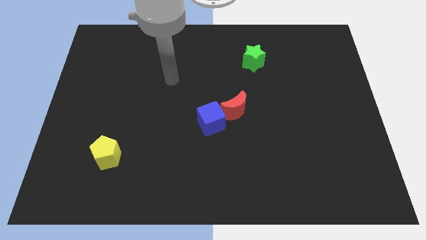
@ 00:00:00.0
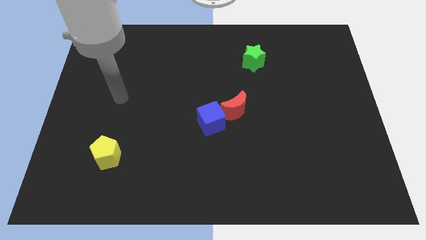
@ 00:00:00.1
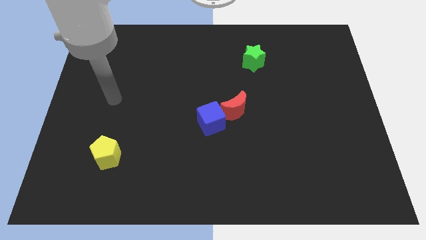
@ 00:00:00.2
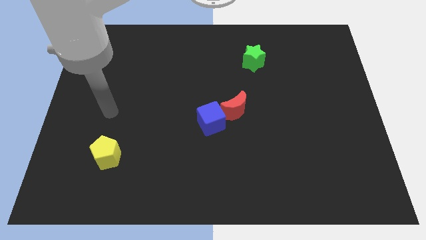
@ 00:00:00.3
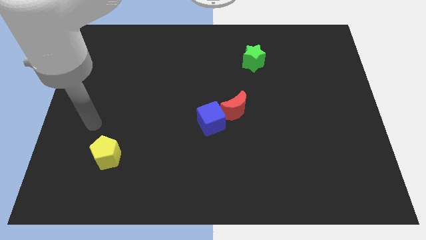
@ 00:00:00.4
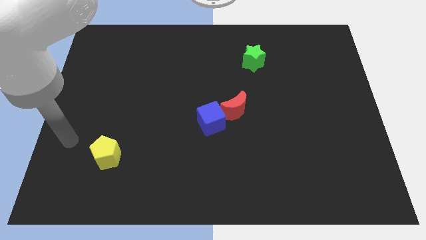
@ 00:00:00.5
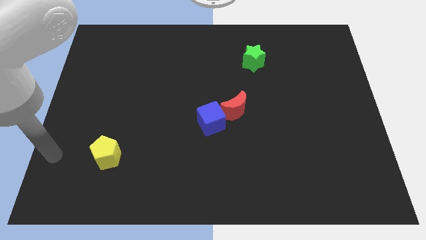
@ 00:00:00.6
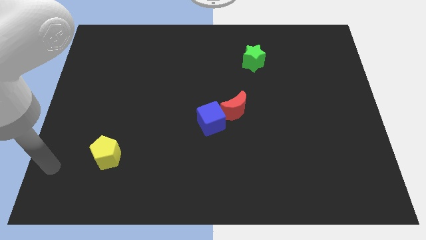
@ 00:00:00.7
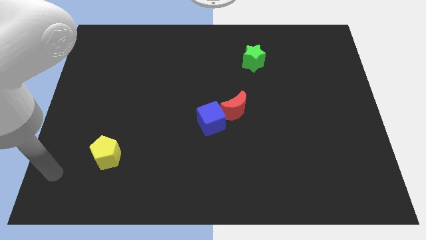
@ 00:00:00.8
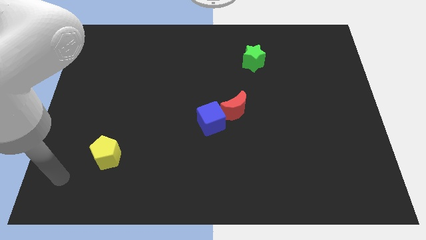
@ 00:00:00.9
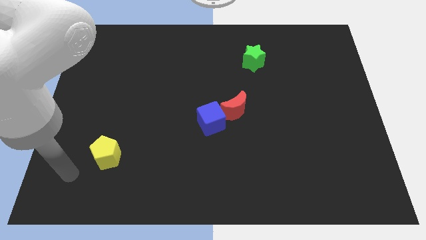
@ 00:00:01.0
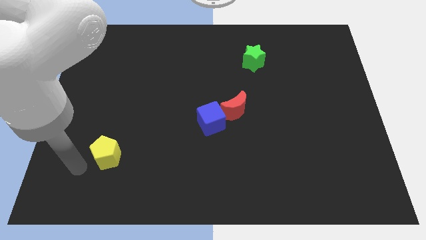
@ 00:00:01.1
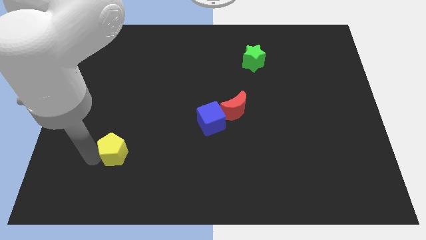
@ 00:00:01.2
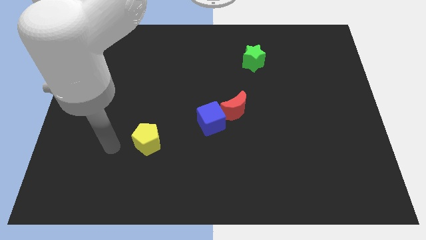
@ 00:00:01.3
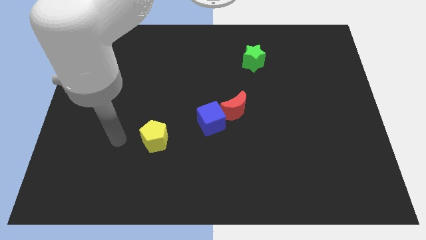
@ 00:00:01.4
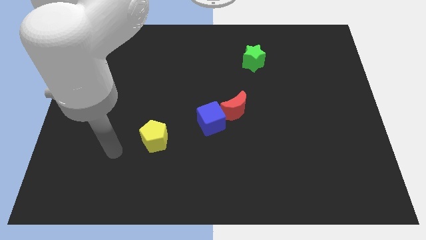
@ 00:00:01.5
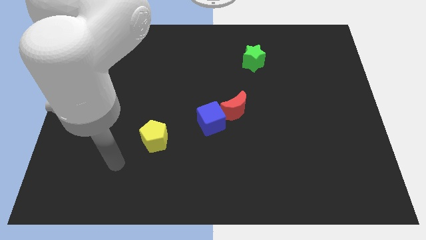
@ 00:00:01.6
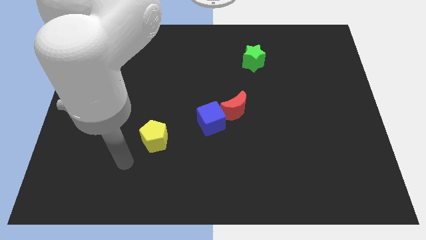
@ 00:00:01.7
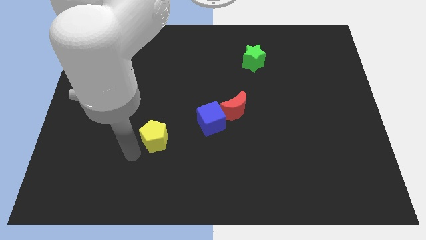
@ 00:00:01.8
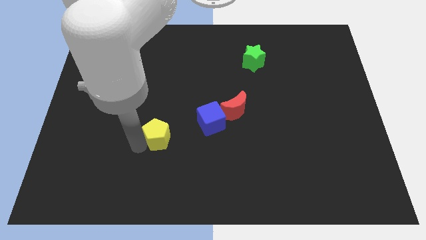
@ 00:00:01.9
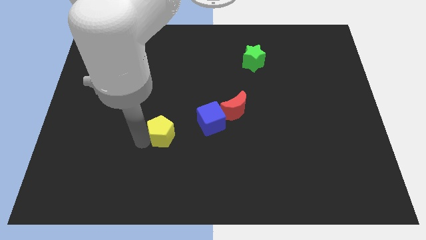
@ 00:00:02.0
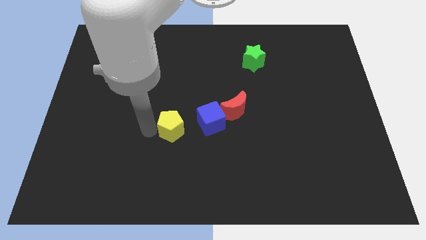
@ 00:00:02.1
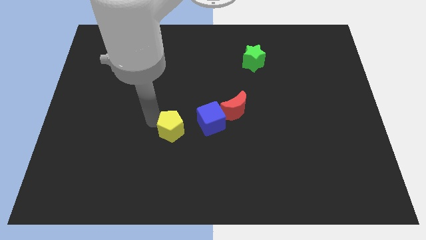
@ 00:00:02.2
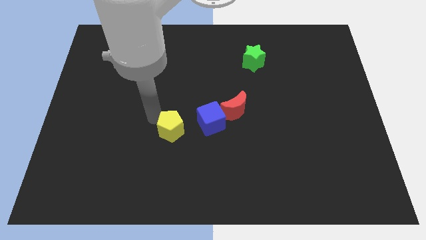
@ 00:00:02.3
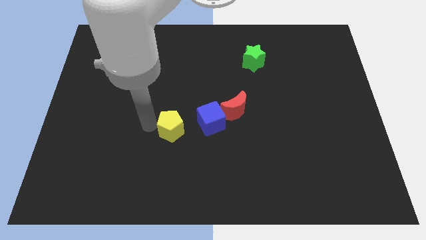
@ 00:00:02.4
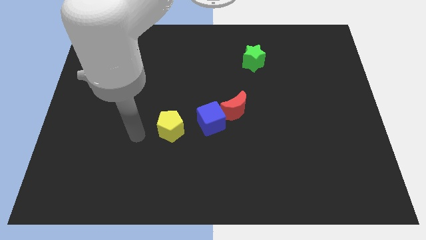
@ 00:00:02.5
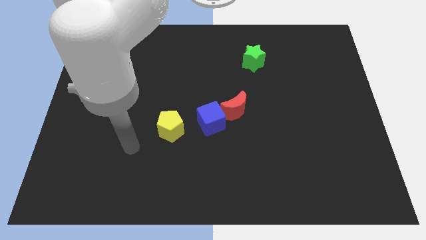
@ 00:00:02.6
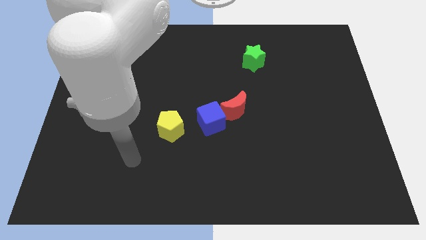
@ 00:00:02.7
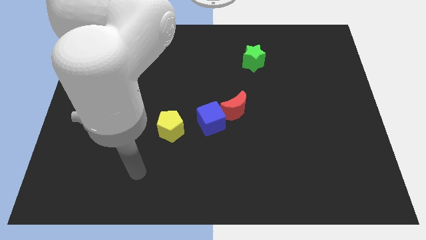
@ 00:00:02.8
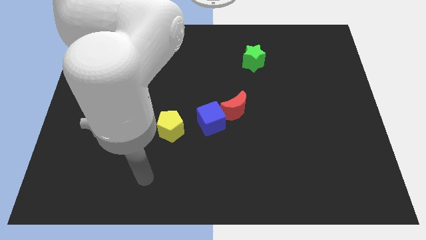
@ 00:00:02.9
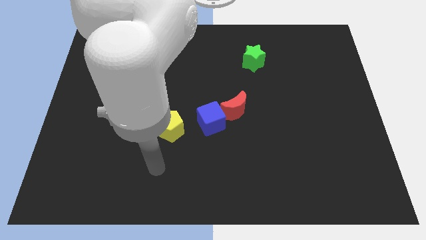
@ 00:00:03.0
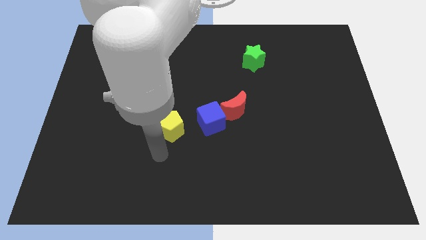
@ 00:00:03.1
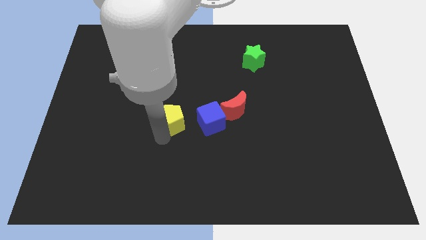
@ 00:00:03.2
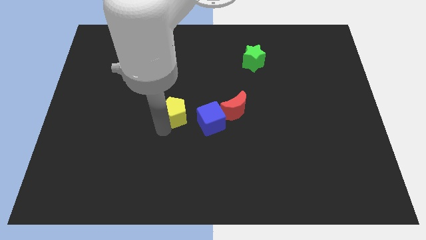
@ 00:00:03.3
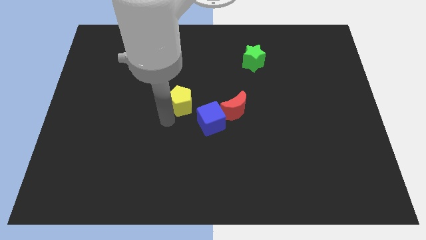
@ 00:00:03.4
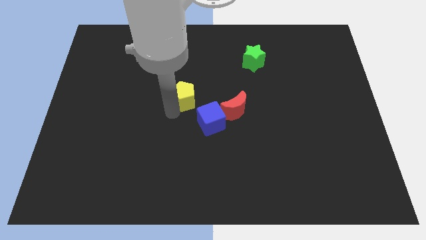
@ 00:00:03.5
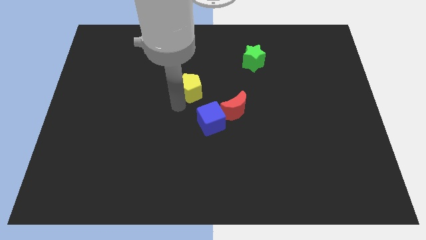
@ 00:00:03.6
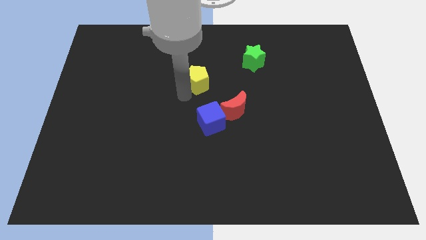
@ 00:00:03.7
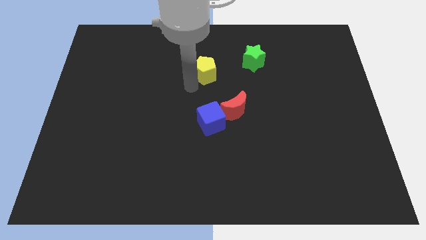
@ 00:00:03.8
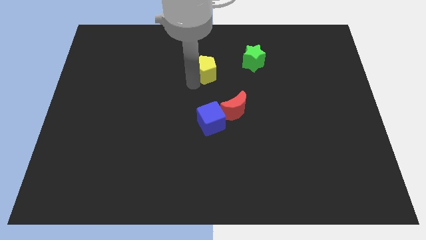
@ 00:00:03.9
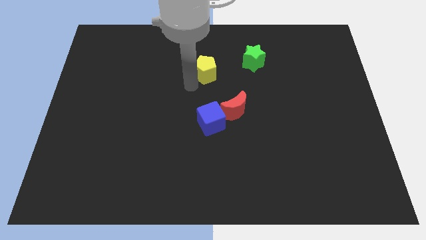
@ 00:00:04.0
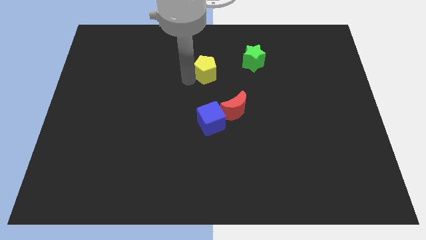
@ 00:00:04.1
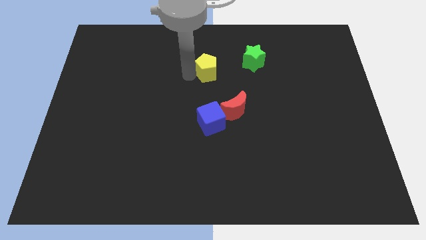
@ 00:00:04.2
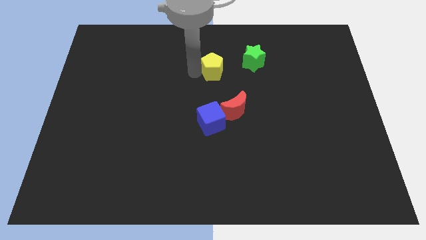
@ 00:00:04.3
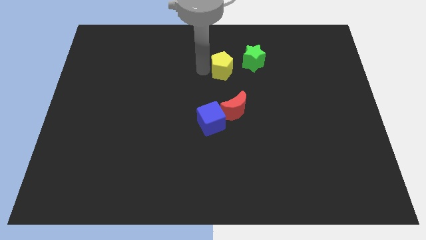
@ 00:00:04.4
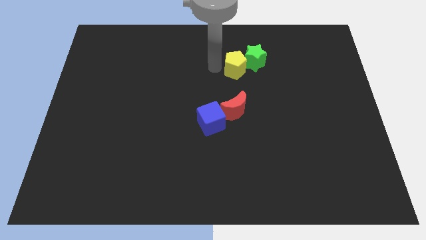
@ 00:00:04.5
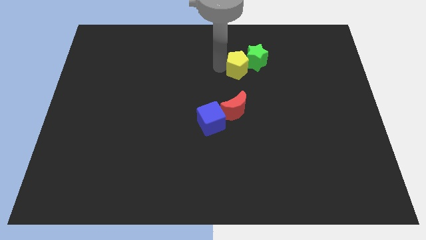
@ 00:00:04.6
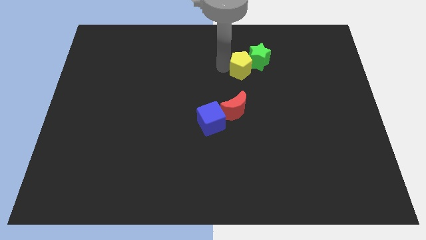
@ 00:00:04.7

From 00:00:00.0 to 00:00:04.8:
move the yellow block to the green block

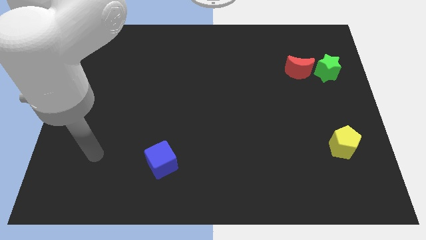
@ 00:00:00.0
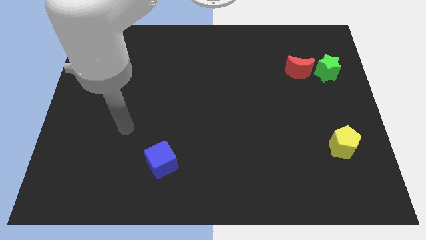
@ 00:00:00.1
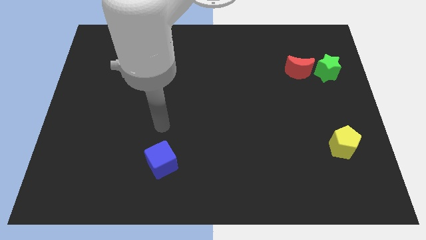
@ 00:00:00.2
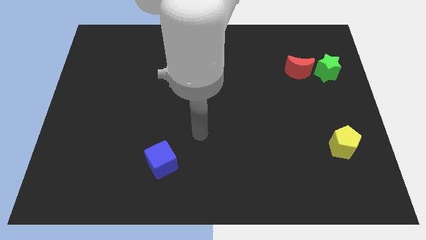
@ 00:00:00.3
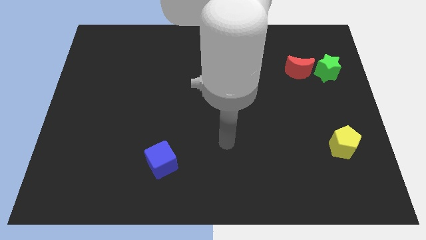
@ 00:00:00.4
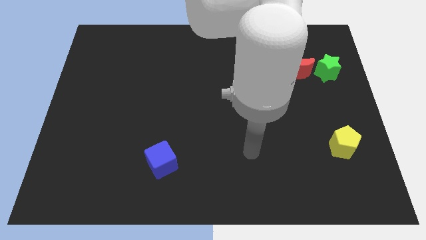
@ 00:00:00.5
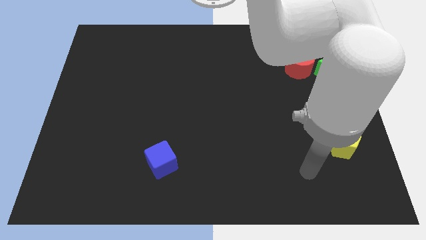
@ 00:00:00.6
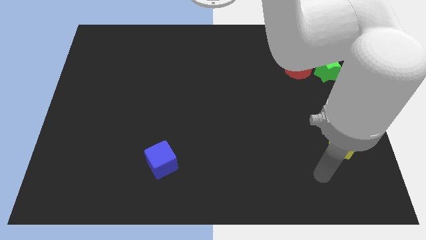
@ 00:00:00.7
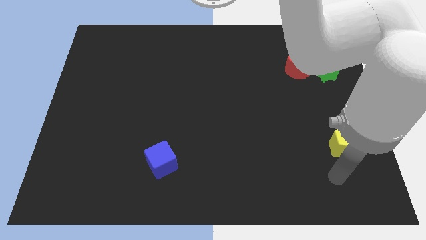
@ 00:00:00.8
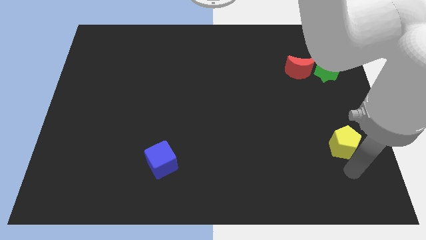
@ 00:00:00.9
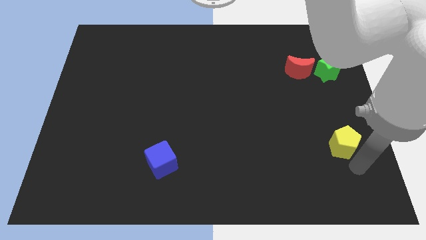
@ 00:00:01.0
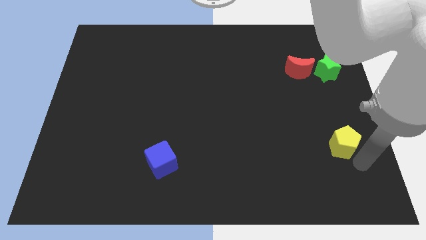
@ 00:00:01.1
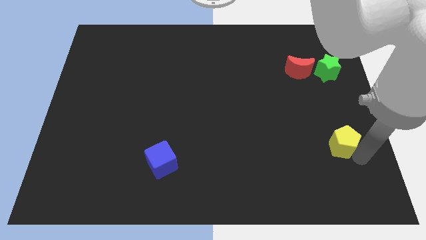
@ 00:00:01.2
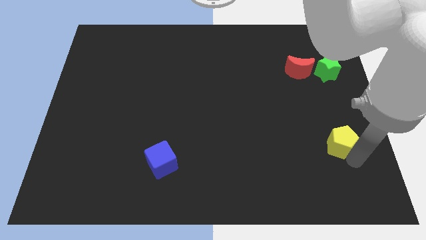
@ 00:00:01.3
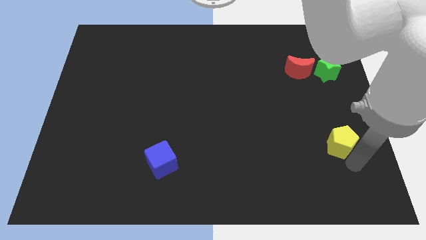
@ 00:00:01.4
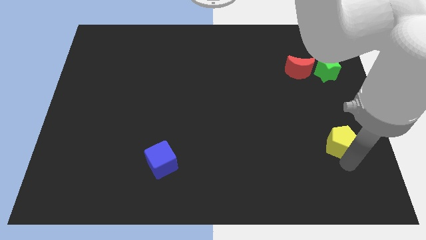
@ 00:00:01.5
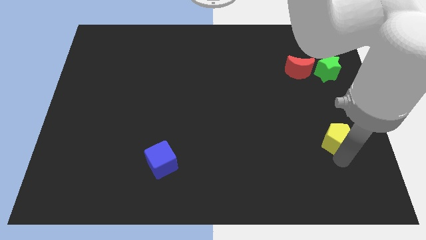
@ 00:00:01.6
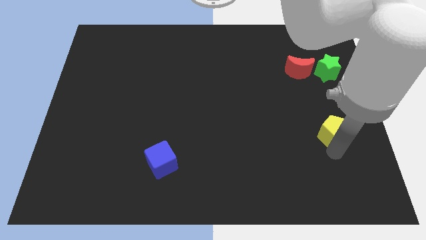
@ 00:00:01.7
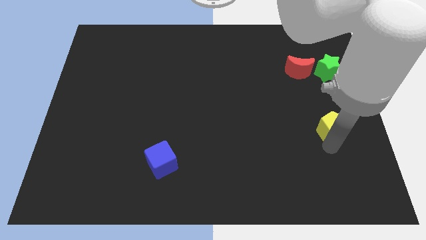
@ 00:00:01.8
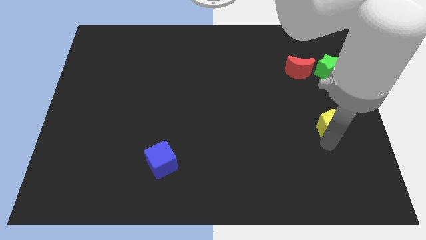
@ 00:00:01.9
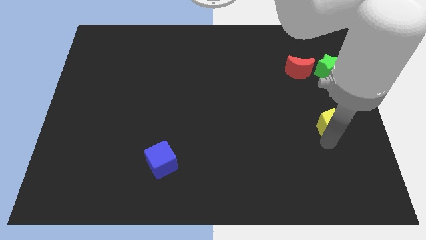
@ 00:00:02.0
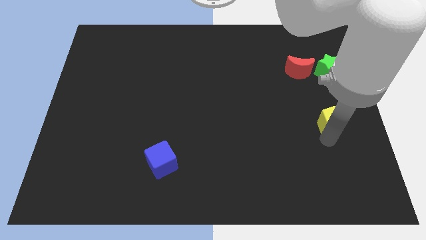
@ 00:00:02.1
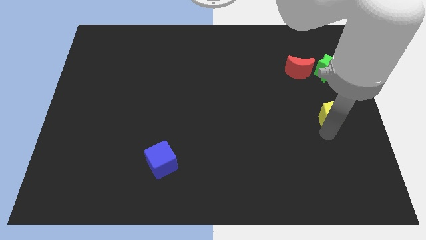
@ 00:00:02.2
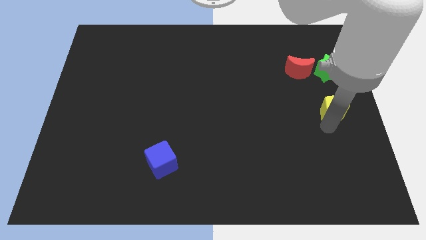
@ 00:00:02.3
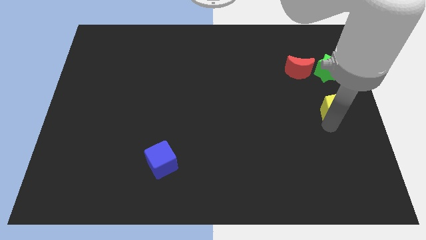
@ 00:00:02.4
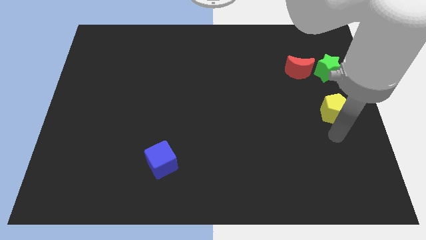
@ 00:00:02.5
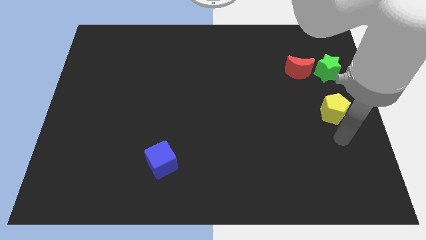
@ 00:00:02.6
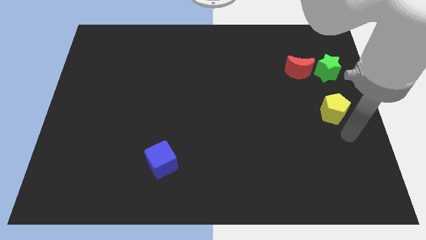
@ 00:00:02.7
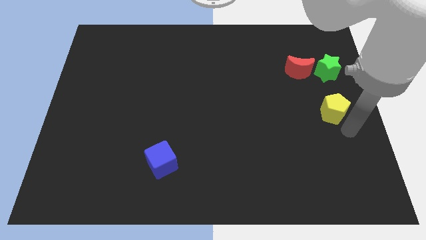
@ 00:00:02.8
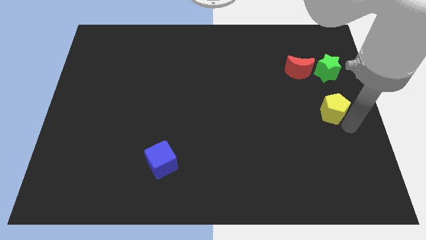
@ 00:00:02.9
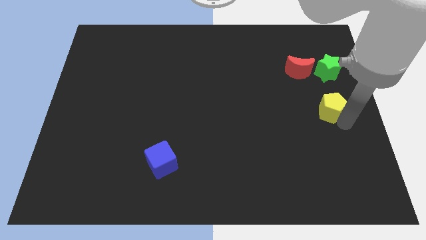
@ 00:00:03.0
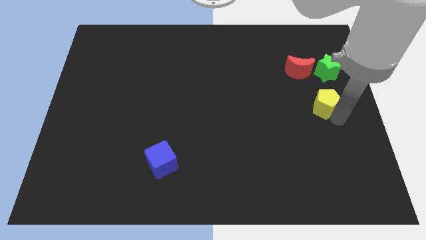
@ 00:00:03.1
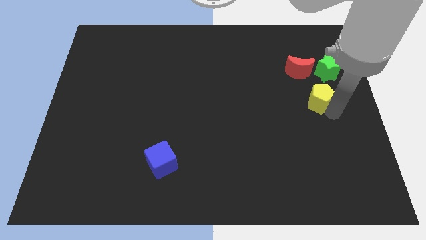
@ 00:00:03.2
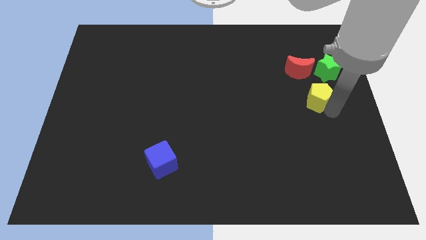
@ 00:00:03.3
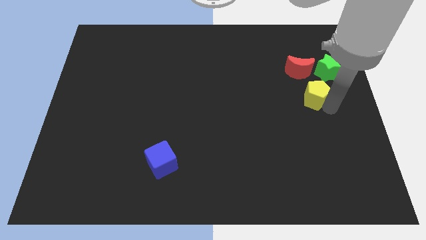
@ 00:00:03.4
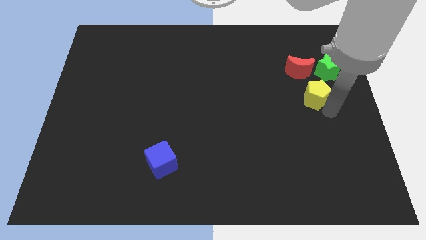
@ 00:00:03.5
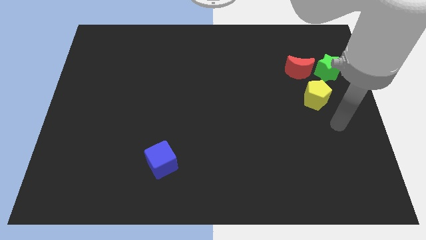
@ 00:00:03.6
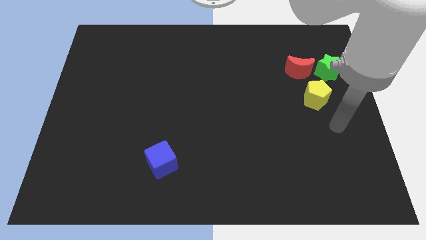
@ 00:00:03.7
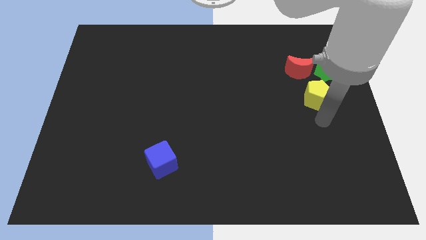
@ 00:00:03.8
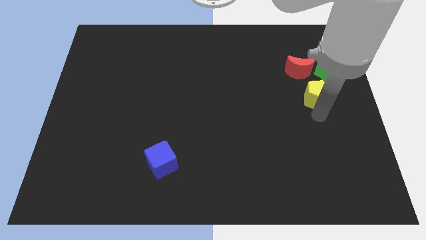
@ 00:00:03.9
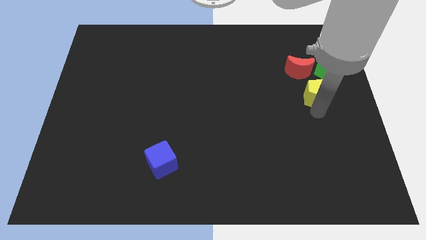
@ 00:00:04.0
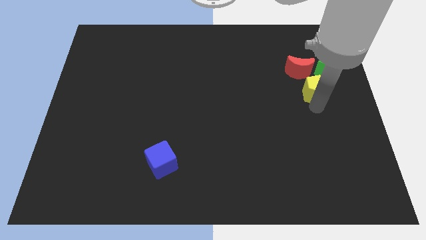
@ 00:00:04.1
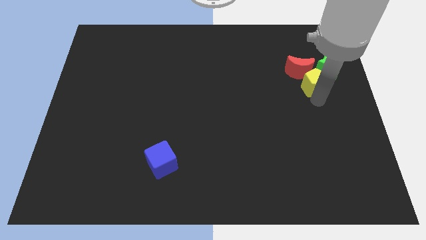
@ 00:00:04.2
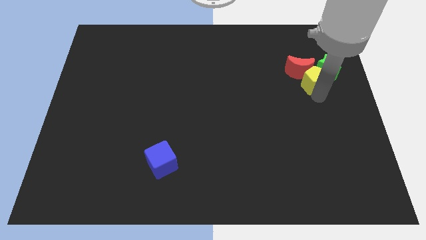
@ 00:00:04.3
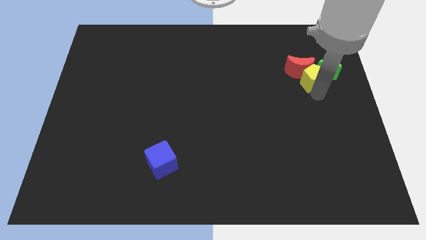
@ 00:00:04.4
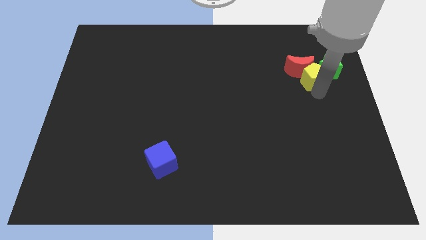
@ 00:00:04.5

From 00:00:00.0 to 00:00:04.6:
push the yellow pentagon next to the green star
